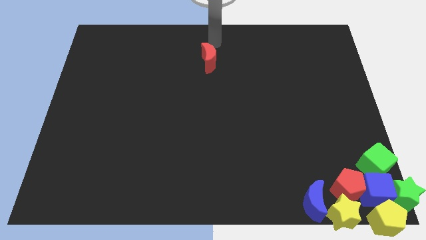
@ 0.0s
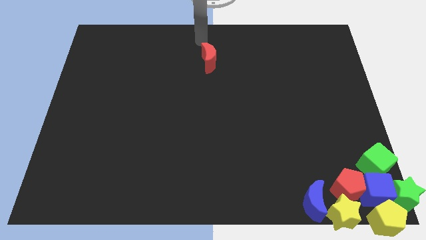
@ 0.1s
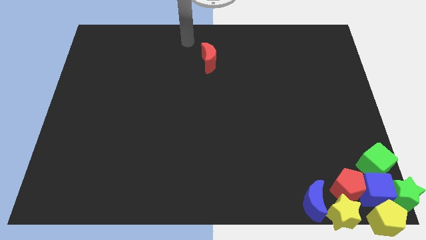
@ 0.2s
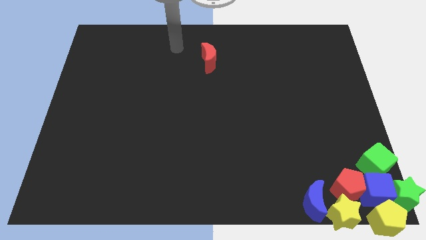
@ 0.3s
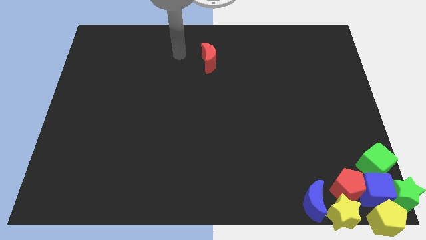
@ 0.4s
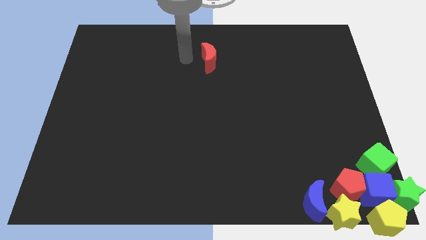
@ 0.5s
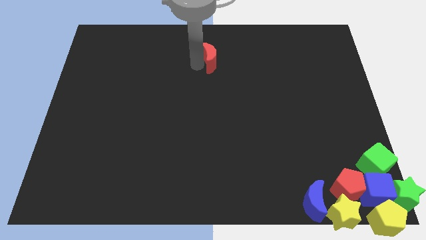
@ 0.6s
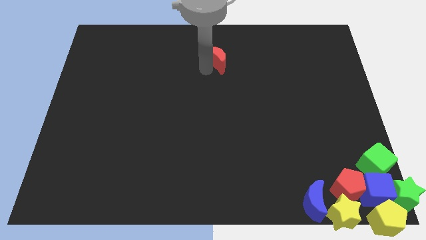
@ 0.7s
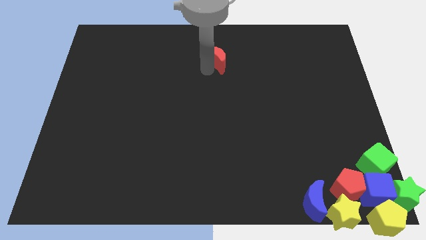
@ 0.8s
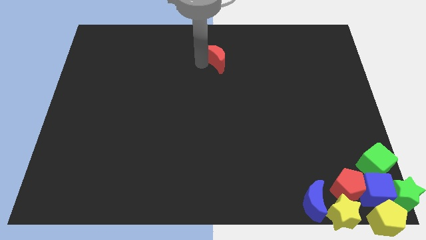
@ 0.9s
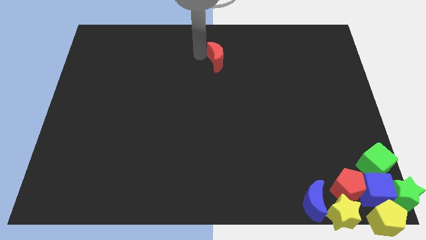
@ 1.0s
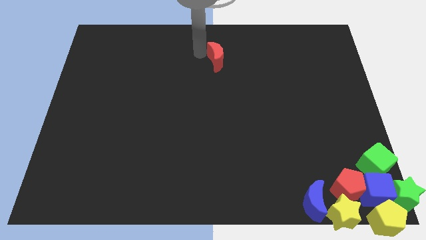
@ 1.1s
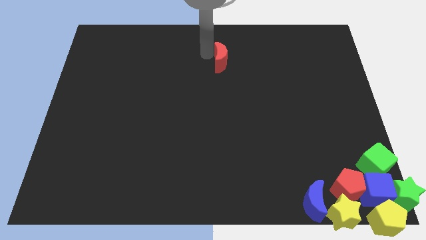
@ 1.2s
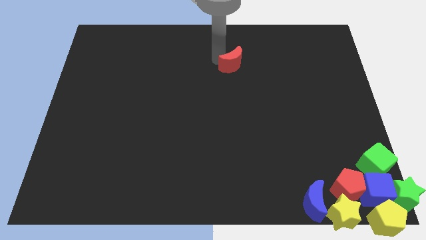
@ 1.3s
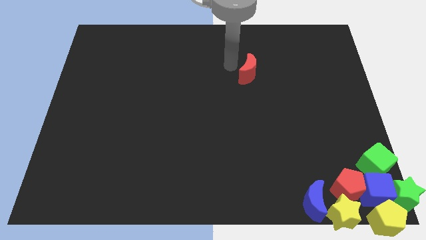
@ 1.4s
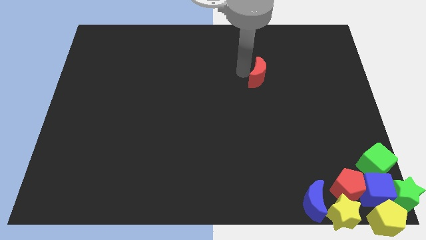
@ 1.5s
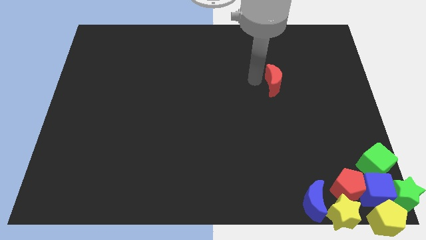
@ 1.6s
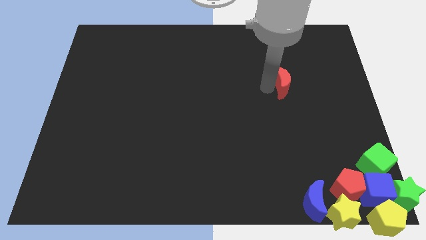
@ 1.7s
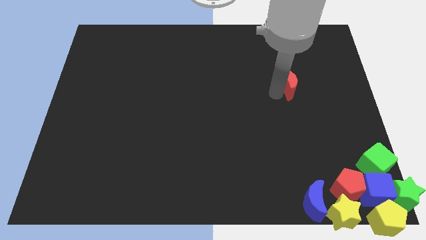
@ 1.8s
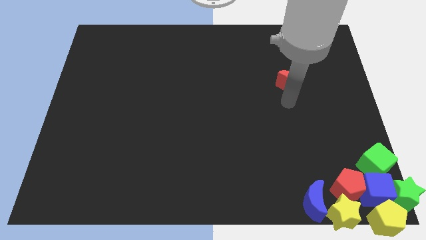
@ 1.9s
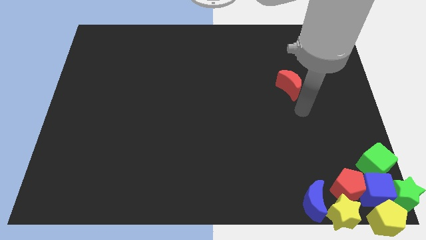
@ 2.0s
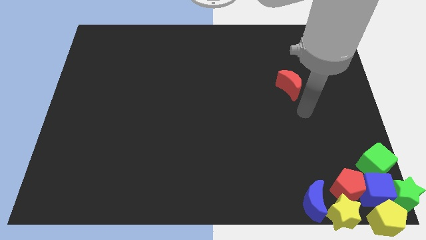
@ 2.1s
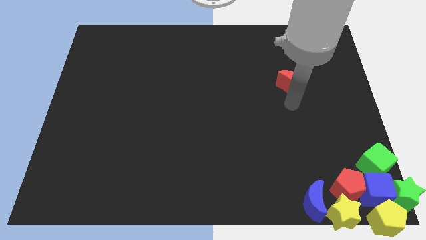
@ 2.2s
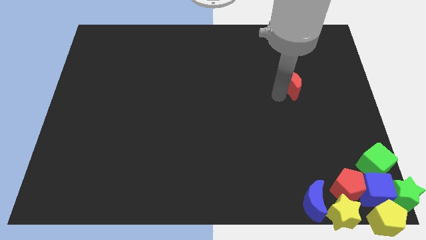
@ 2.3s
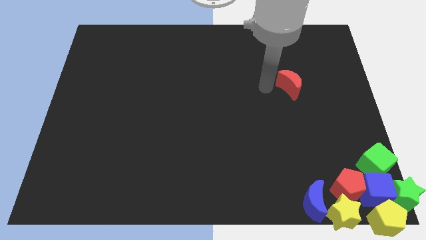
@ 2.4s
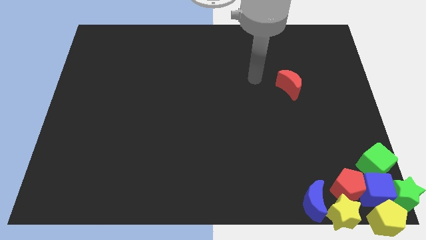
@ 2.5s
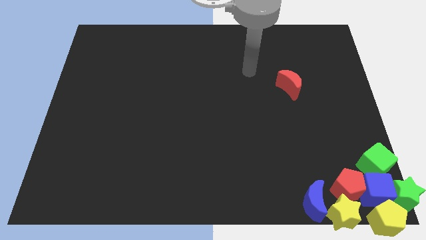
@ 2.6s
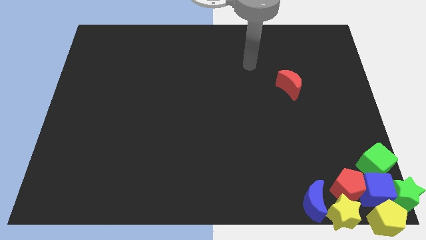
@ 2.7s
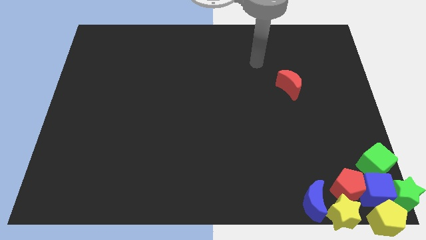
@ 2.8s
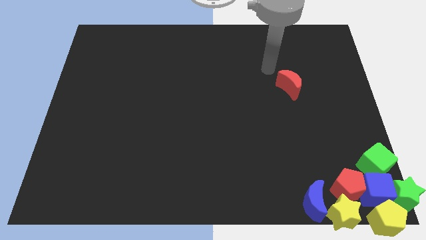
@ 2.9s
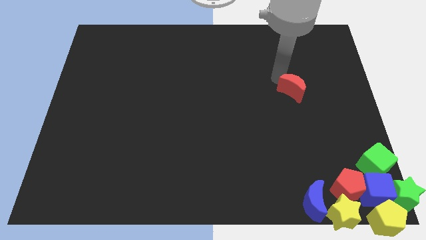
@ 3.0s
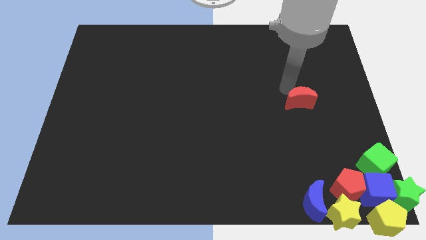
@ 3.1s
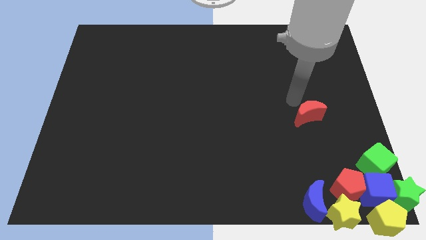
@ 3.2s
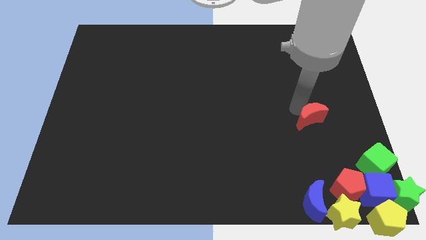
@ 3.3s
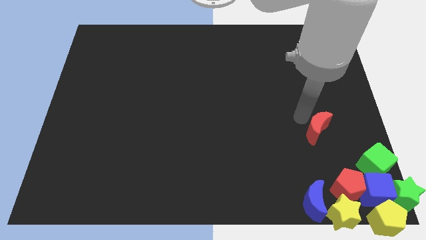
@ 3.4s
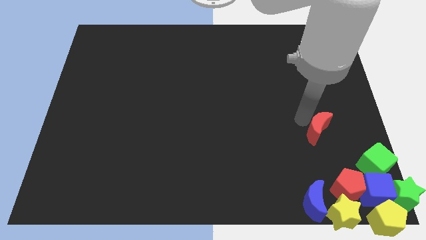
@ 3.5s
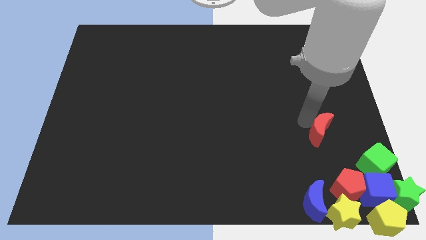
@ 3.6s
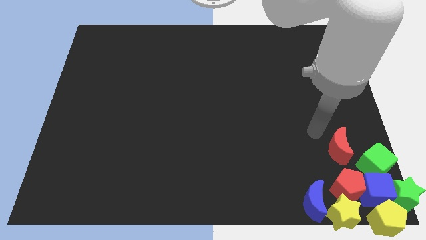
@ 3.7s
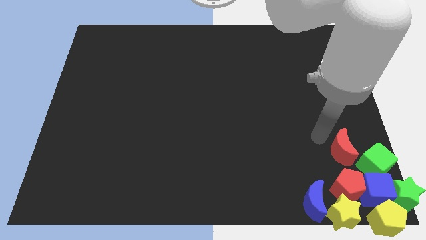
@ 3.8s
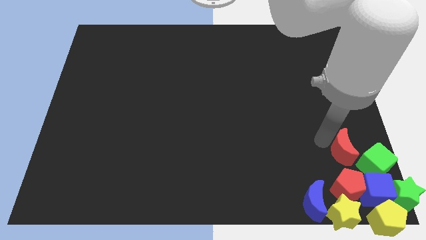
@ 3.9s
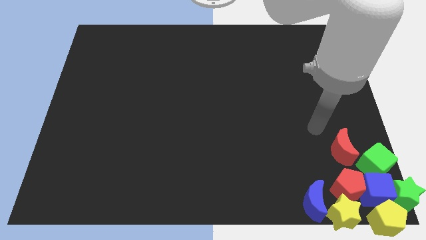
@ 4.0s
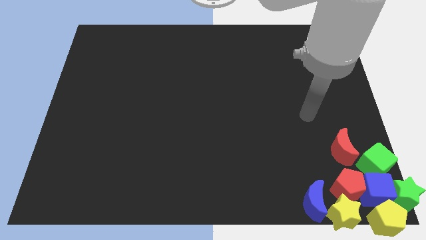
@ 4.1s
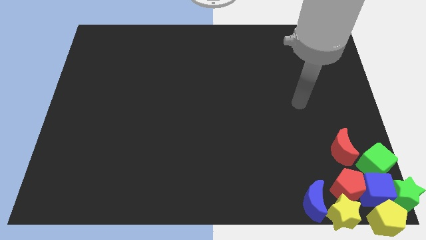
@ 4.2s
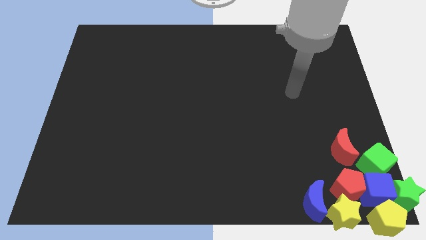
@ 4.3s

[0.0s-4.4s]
move the red moon close to the green cube

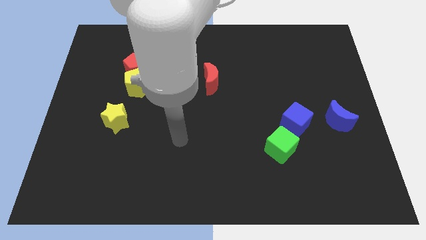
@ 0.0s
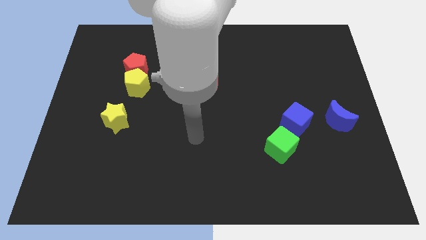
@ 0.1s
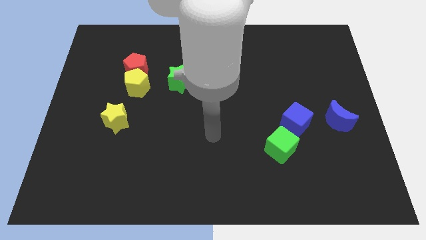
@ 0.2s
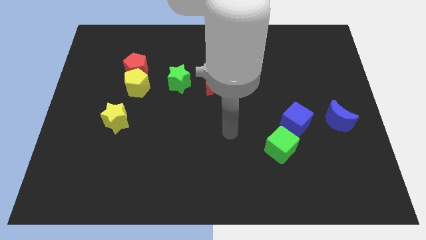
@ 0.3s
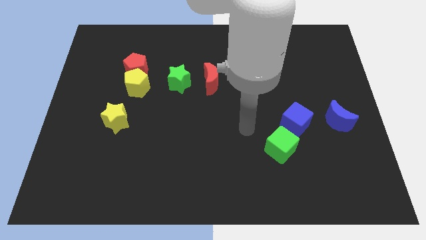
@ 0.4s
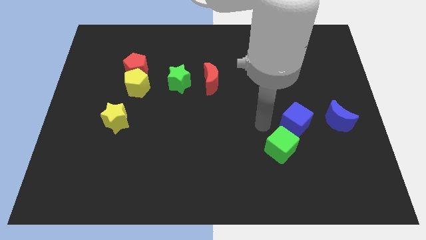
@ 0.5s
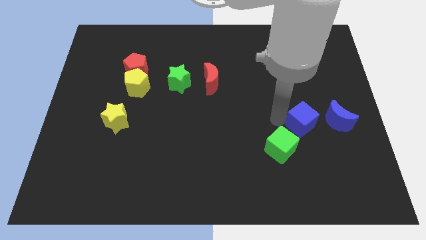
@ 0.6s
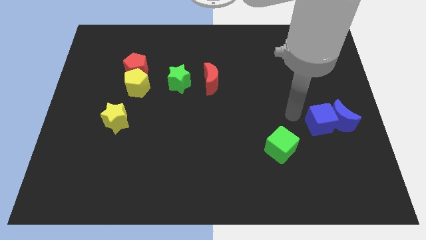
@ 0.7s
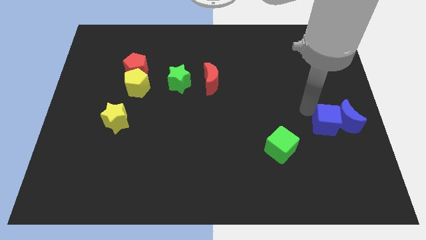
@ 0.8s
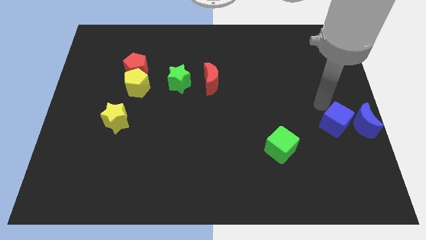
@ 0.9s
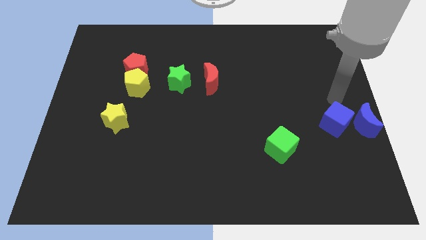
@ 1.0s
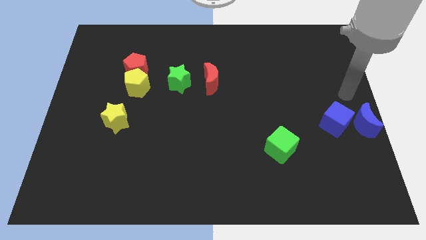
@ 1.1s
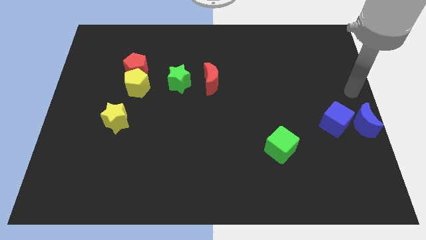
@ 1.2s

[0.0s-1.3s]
move the blue cube and the blue moon towards right

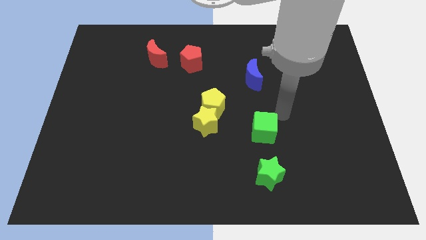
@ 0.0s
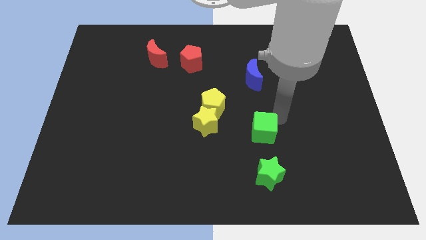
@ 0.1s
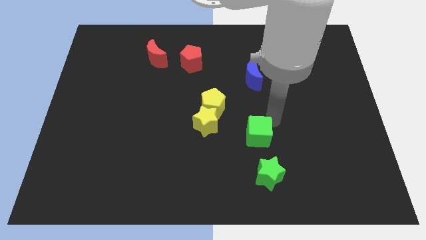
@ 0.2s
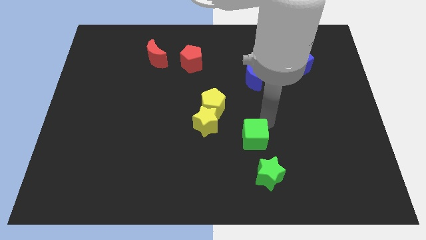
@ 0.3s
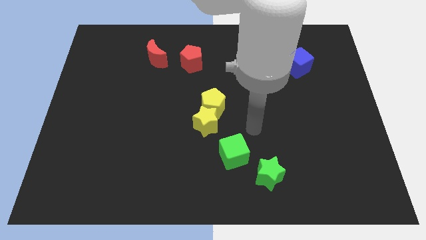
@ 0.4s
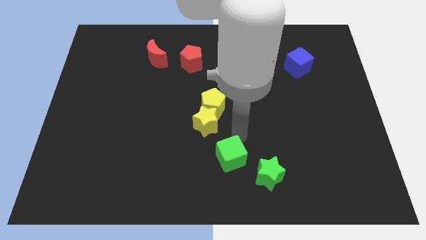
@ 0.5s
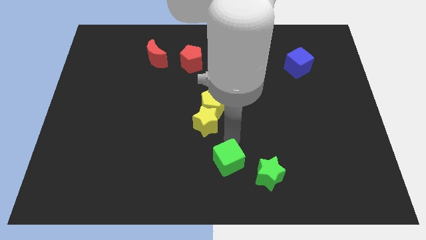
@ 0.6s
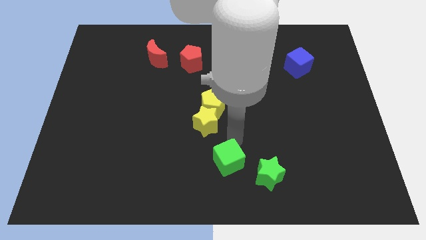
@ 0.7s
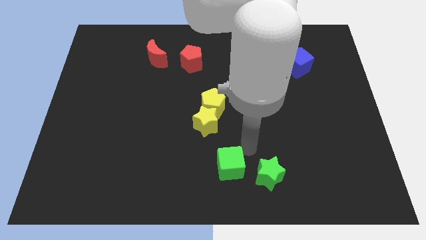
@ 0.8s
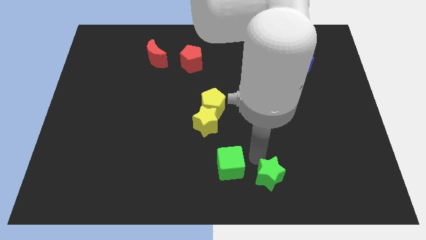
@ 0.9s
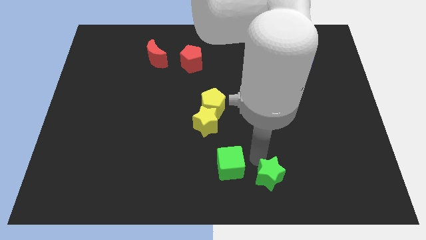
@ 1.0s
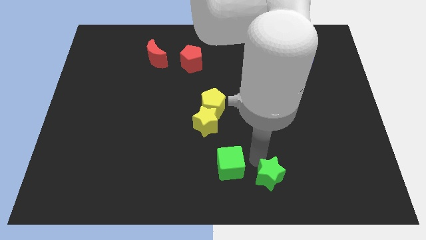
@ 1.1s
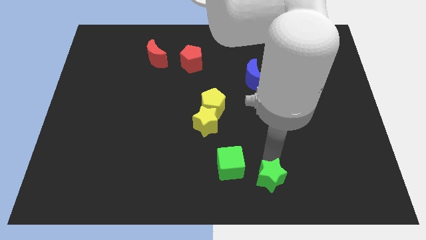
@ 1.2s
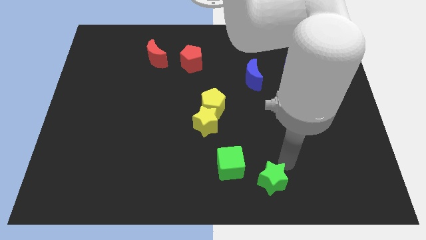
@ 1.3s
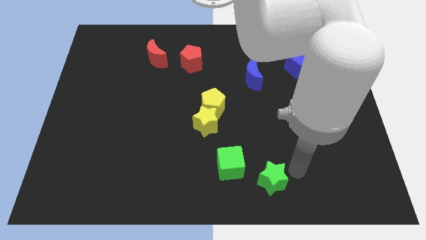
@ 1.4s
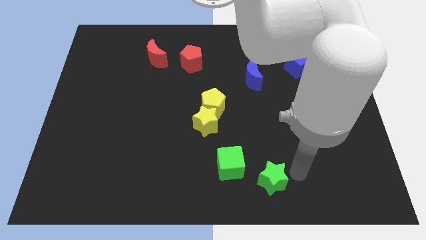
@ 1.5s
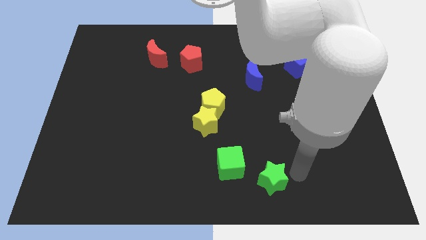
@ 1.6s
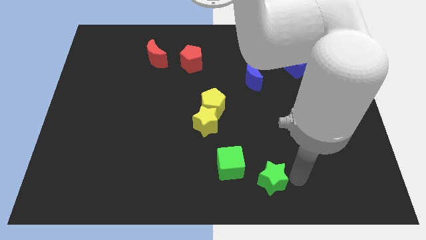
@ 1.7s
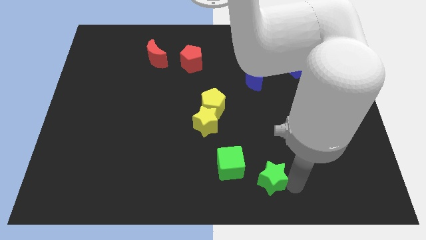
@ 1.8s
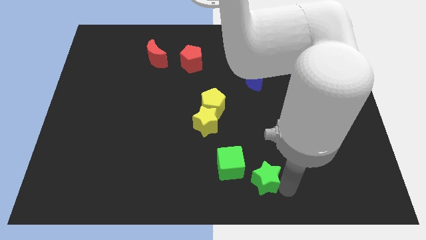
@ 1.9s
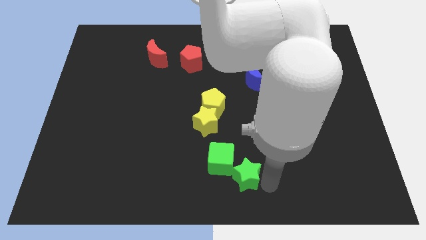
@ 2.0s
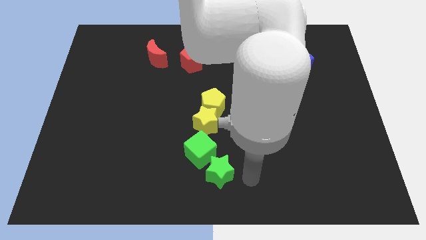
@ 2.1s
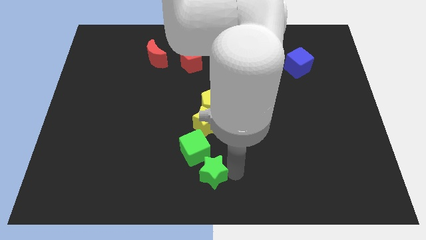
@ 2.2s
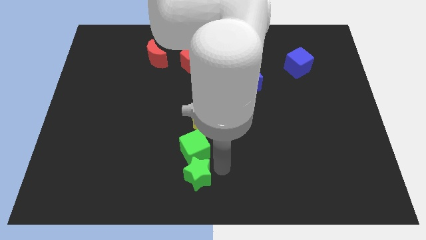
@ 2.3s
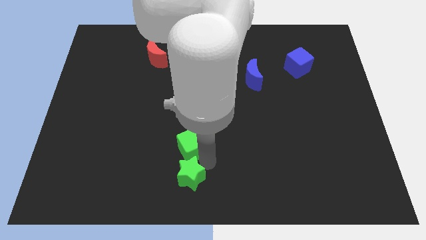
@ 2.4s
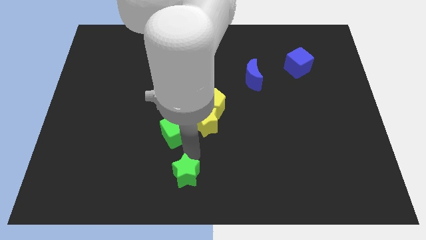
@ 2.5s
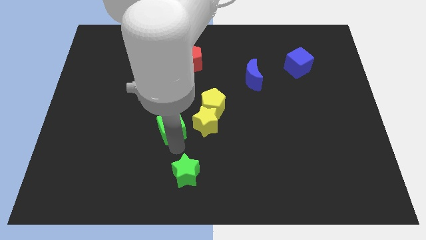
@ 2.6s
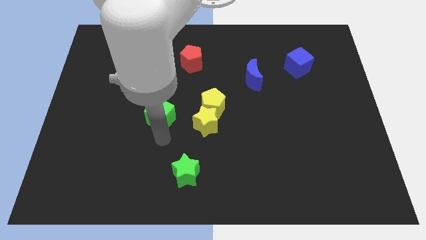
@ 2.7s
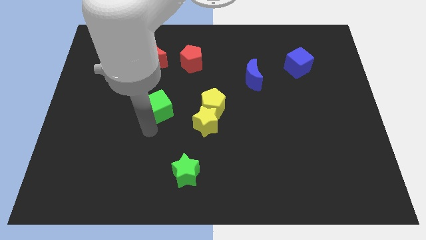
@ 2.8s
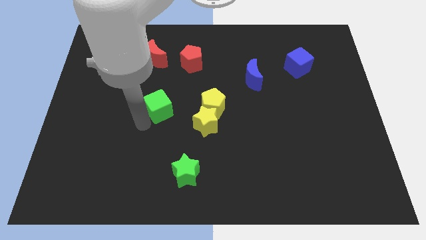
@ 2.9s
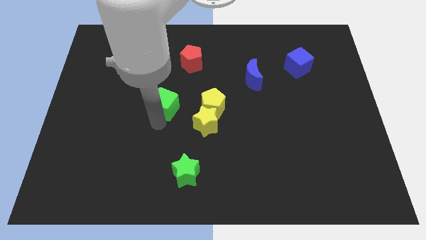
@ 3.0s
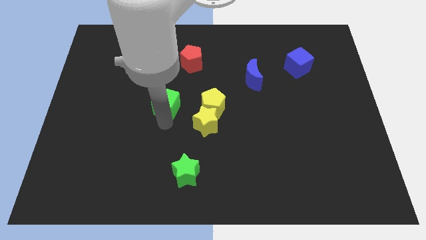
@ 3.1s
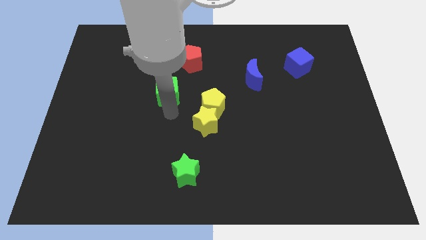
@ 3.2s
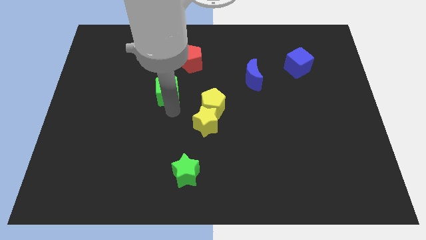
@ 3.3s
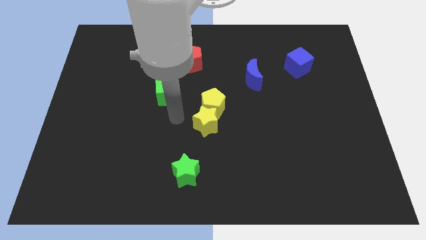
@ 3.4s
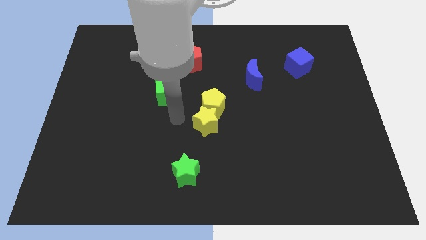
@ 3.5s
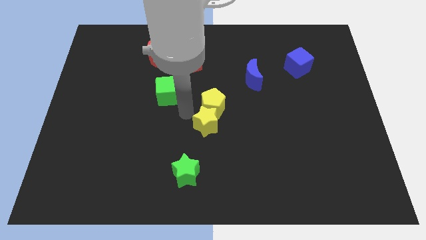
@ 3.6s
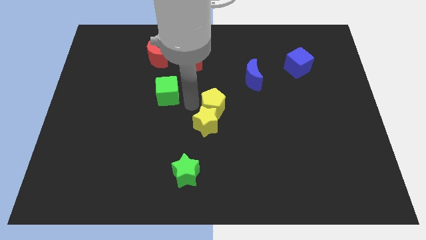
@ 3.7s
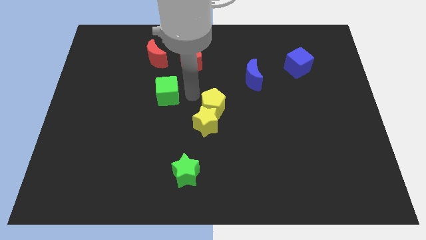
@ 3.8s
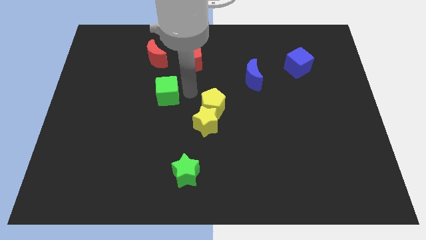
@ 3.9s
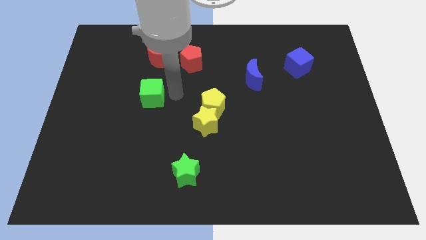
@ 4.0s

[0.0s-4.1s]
move green cube to the bottom side of the red moon
